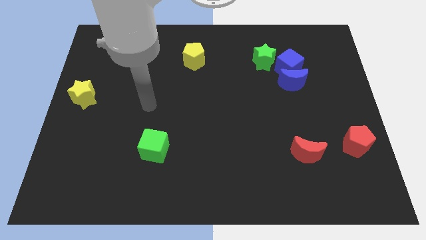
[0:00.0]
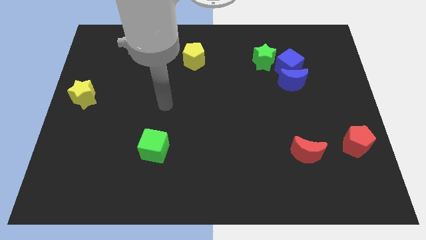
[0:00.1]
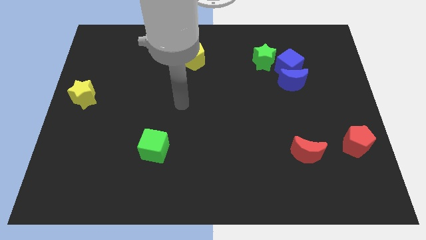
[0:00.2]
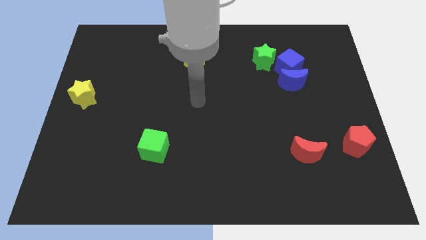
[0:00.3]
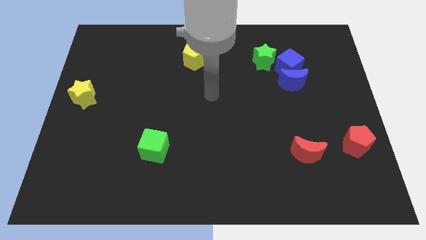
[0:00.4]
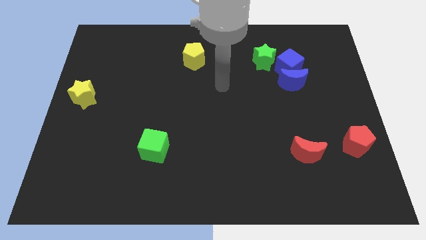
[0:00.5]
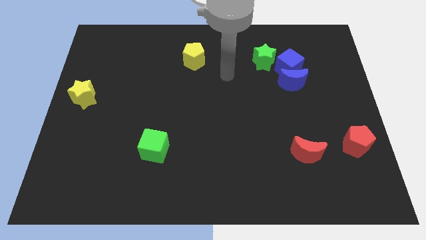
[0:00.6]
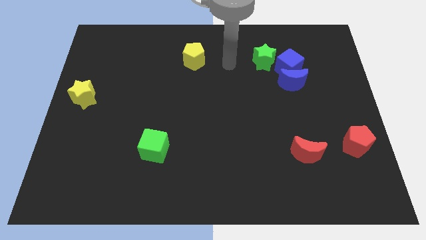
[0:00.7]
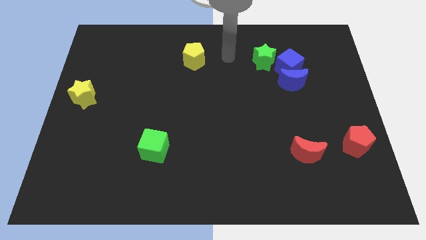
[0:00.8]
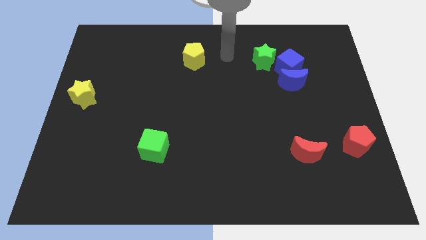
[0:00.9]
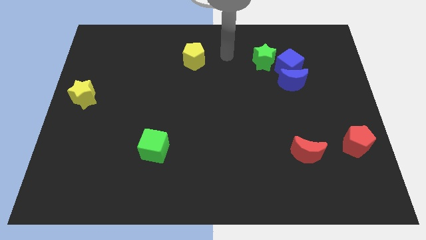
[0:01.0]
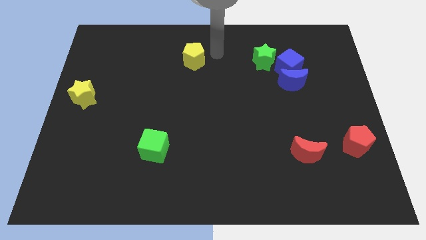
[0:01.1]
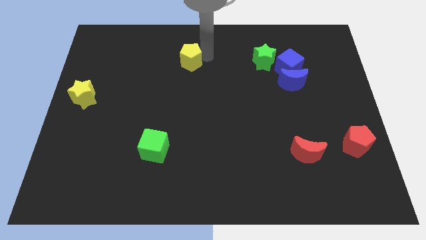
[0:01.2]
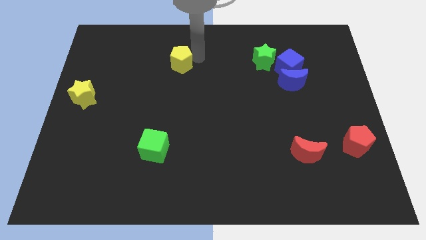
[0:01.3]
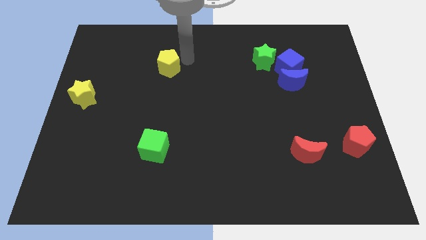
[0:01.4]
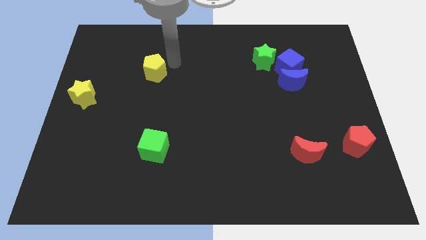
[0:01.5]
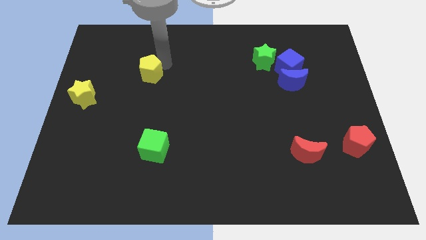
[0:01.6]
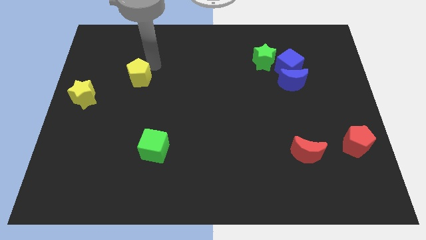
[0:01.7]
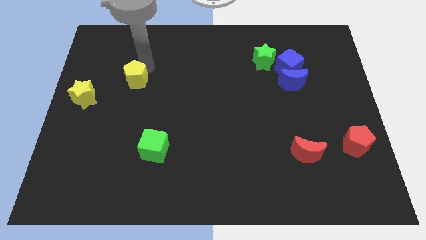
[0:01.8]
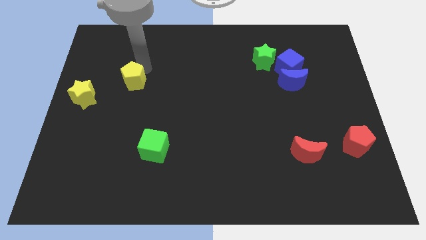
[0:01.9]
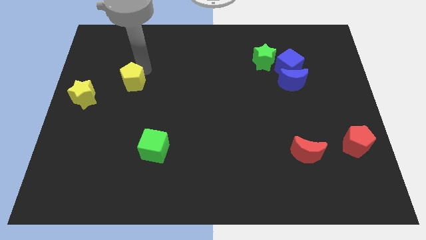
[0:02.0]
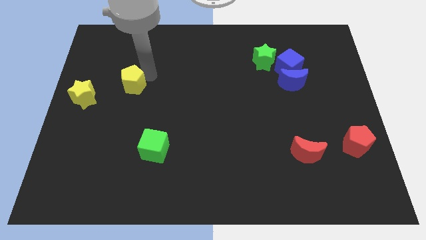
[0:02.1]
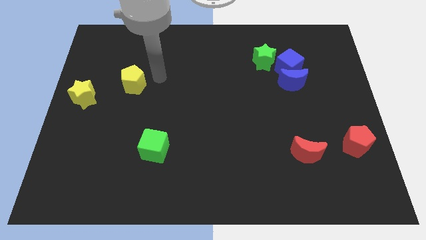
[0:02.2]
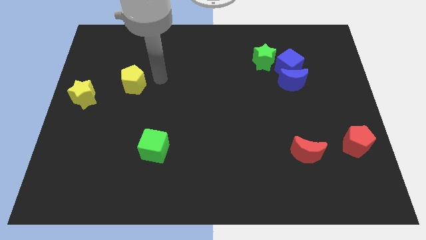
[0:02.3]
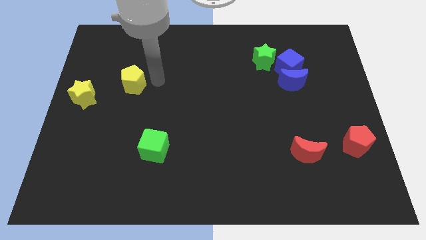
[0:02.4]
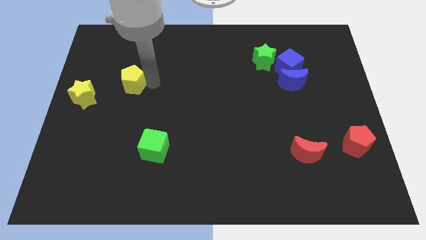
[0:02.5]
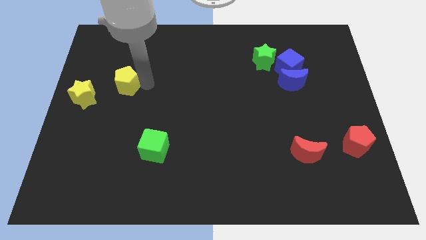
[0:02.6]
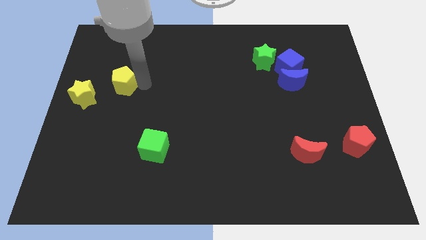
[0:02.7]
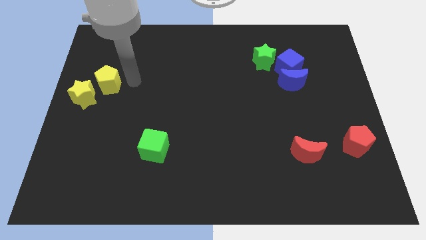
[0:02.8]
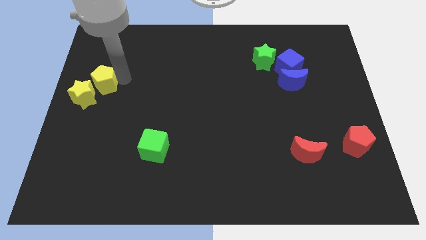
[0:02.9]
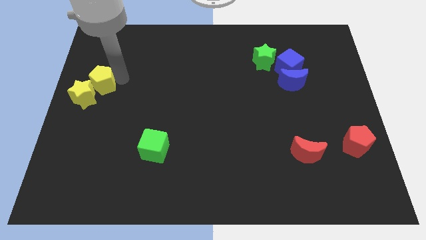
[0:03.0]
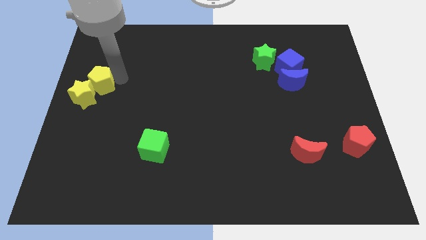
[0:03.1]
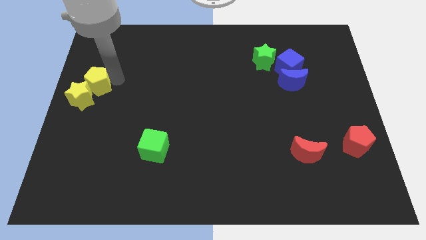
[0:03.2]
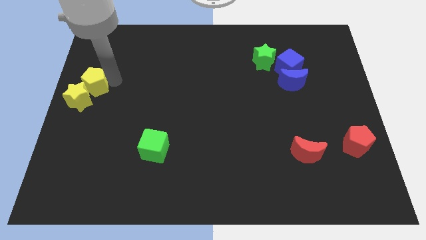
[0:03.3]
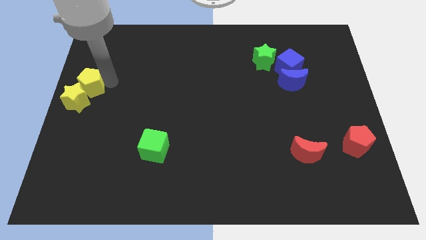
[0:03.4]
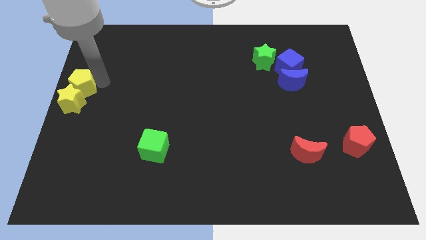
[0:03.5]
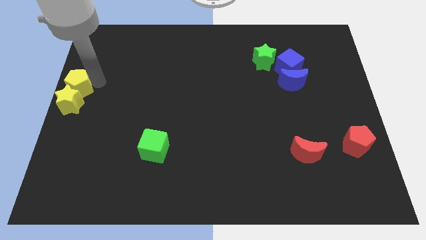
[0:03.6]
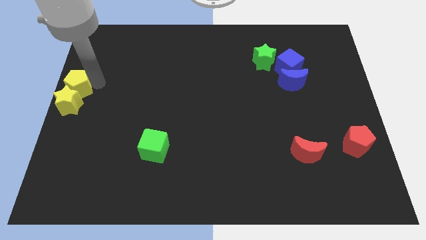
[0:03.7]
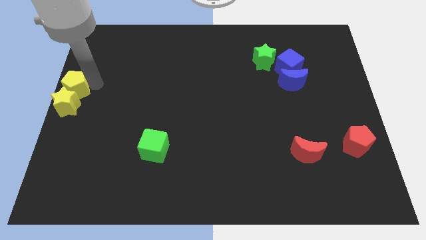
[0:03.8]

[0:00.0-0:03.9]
move the yellow pentagon above the yellow star

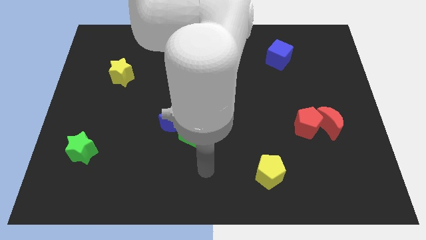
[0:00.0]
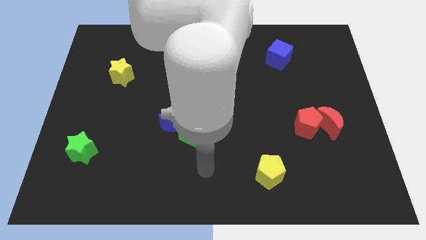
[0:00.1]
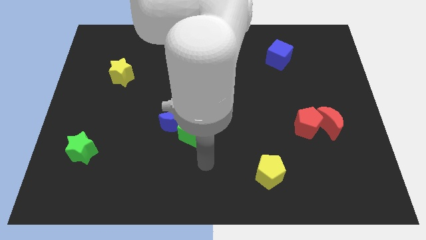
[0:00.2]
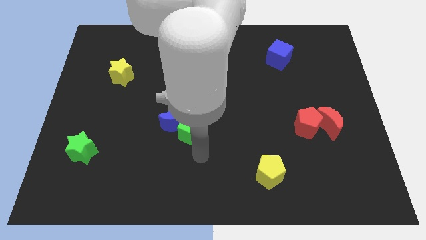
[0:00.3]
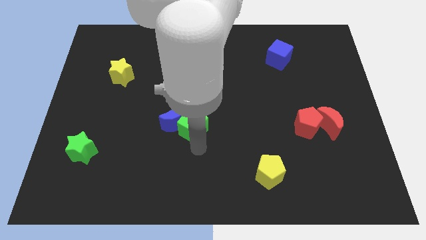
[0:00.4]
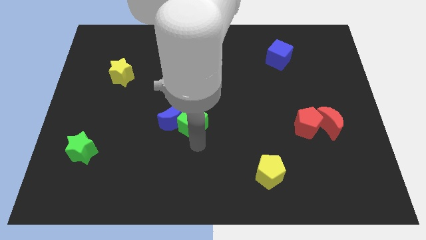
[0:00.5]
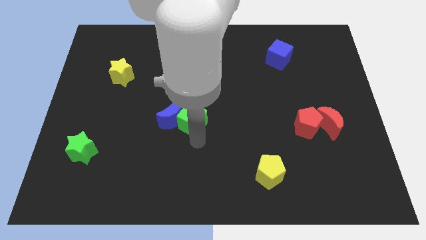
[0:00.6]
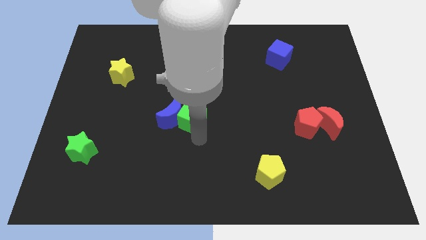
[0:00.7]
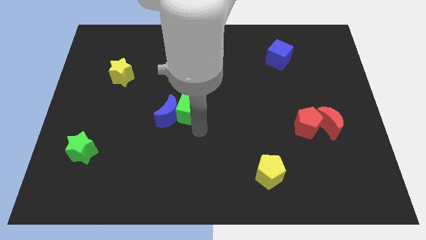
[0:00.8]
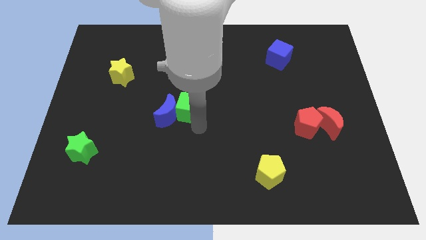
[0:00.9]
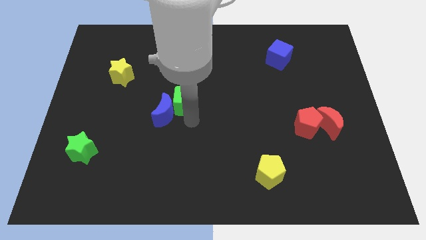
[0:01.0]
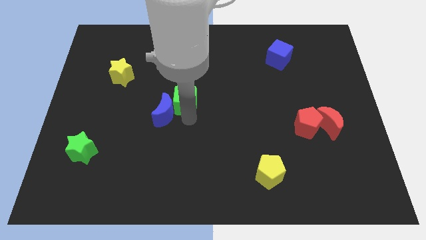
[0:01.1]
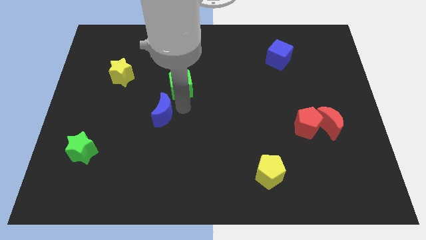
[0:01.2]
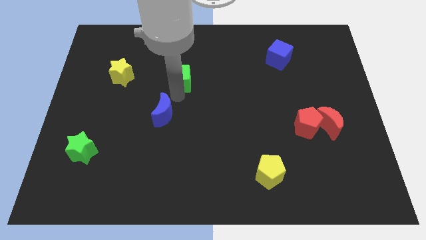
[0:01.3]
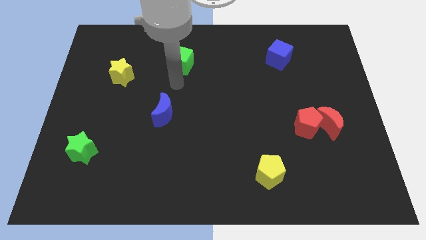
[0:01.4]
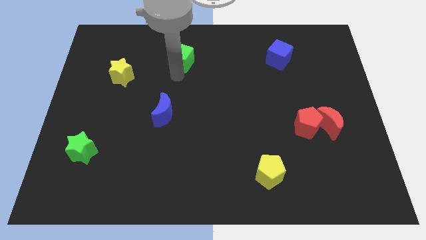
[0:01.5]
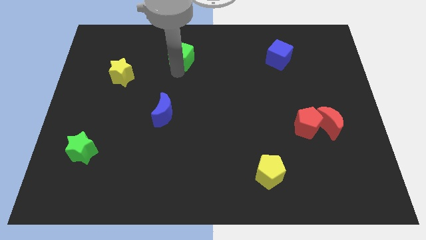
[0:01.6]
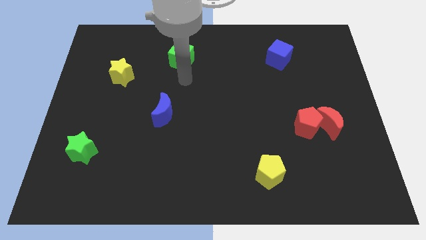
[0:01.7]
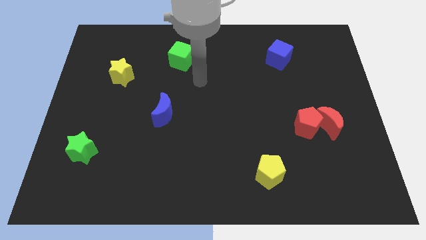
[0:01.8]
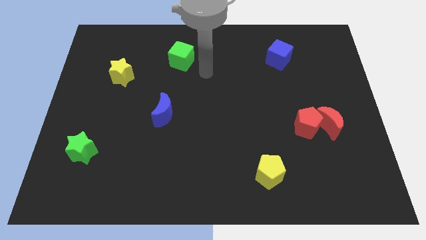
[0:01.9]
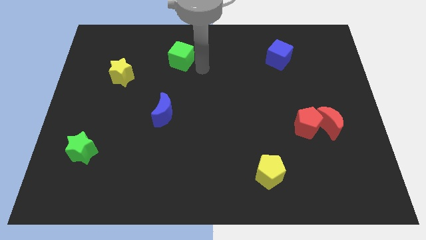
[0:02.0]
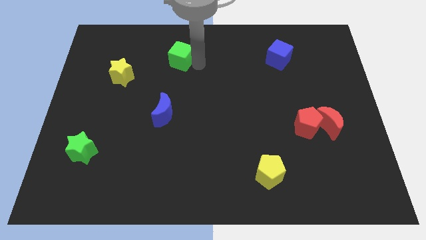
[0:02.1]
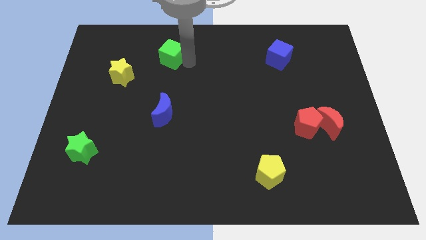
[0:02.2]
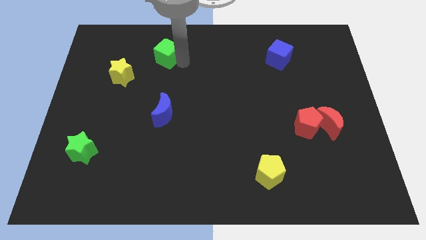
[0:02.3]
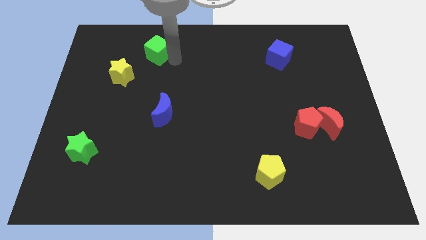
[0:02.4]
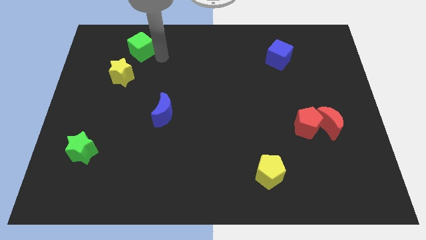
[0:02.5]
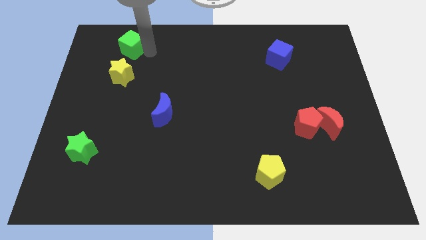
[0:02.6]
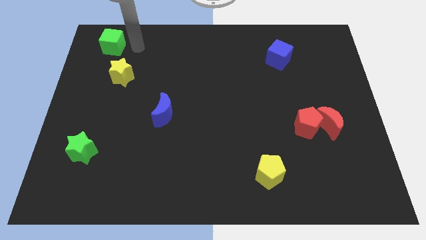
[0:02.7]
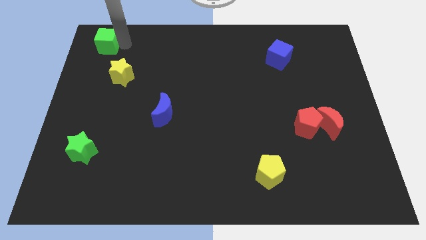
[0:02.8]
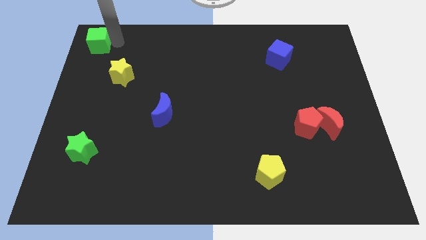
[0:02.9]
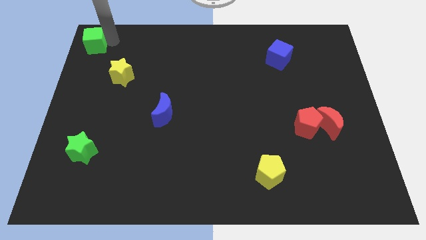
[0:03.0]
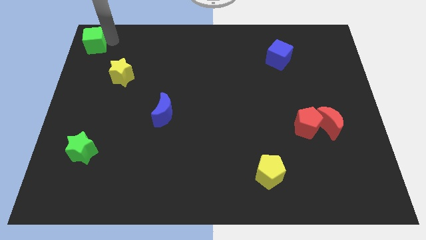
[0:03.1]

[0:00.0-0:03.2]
push the green cube to the top left of the yellow star

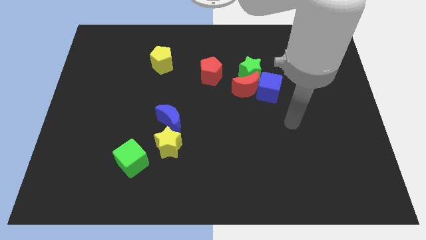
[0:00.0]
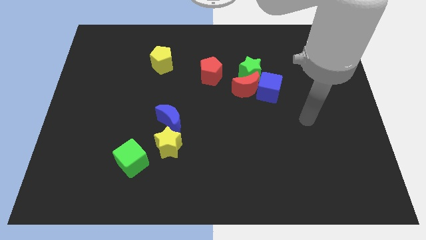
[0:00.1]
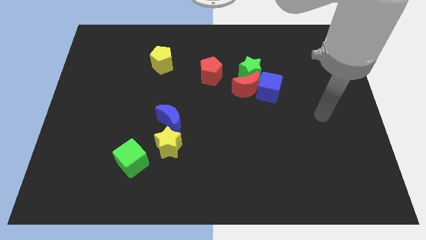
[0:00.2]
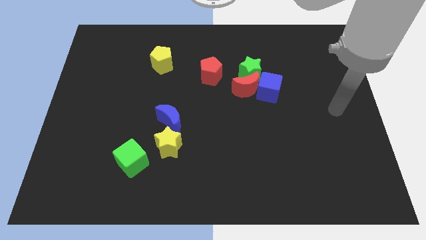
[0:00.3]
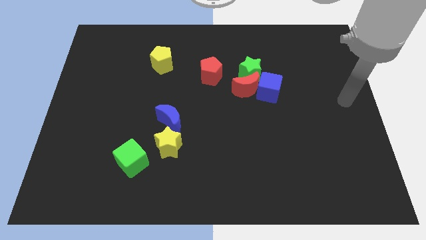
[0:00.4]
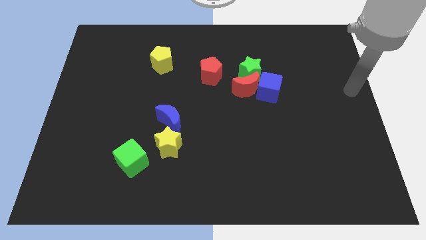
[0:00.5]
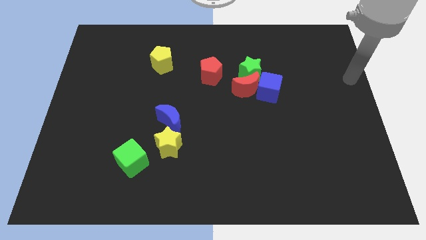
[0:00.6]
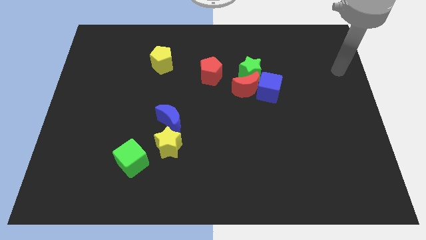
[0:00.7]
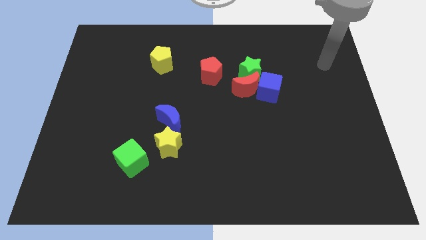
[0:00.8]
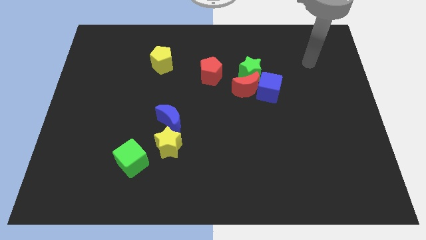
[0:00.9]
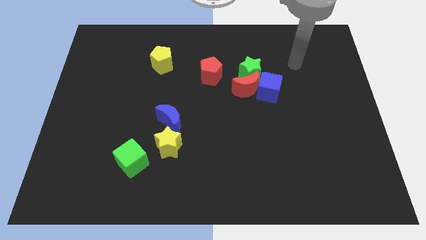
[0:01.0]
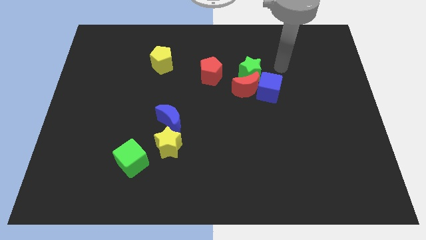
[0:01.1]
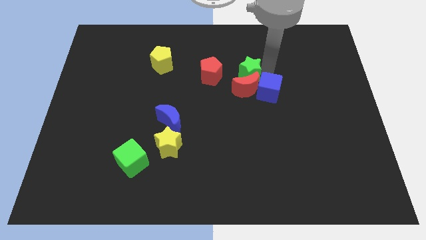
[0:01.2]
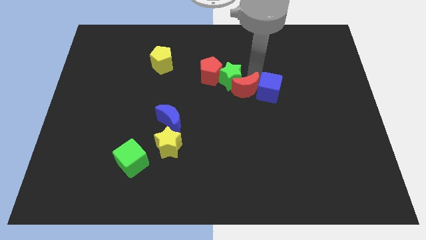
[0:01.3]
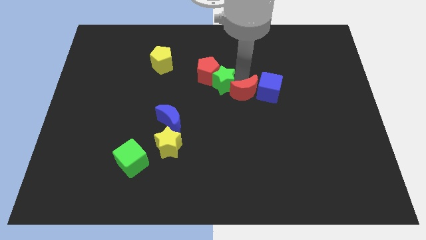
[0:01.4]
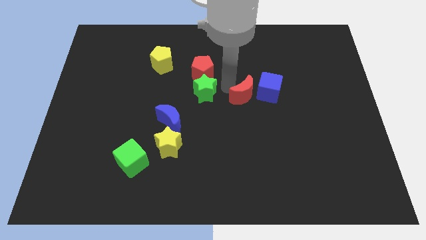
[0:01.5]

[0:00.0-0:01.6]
place the green star down to the red pentagon
